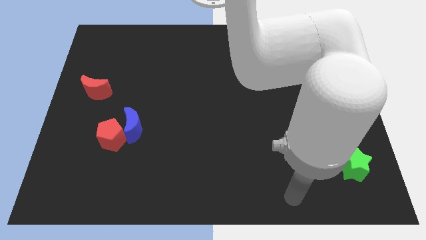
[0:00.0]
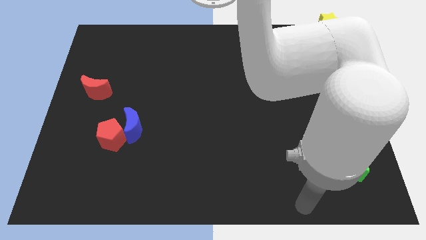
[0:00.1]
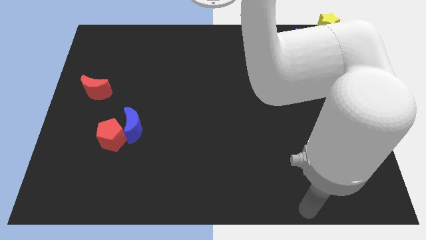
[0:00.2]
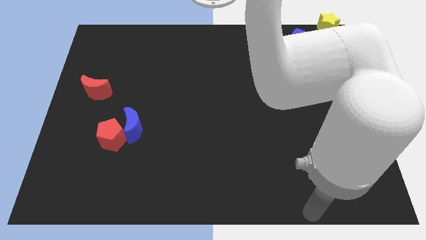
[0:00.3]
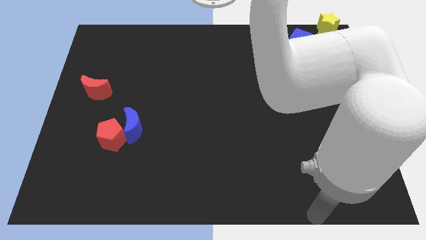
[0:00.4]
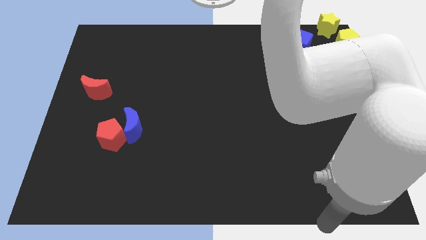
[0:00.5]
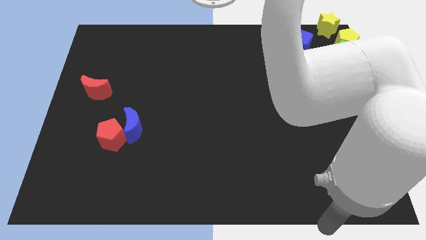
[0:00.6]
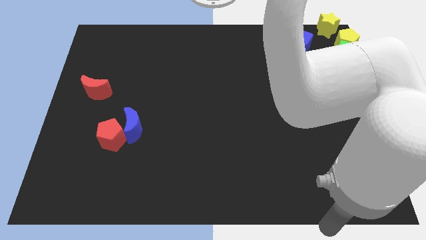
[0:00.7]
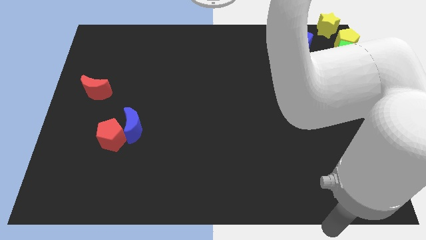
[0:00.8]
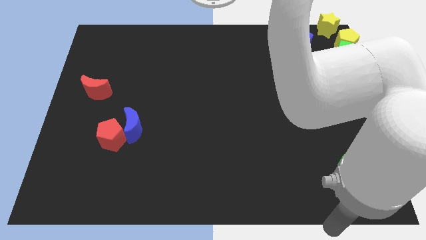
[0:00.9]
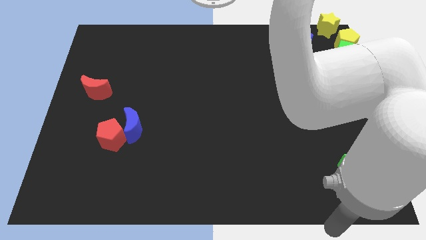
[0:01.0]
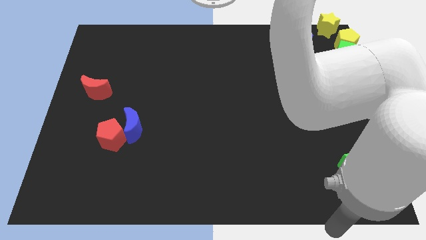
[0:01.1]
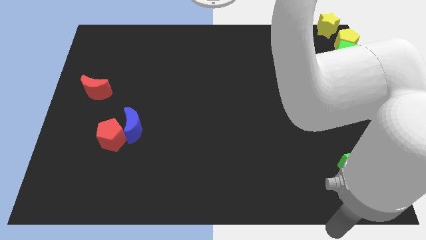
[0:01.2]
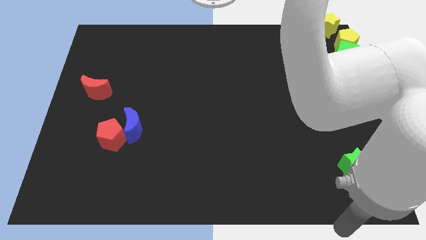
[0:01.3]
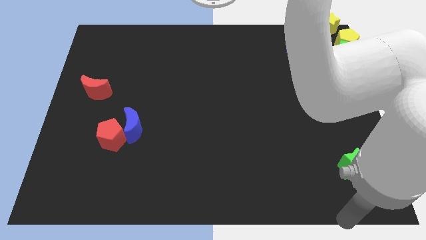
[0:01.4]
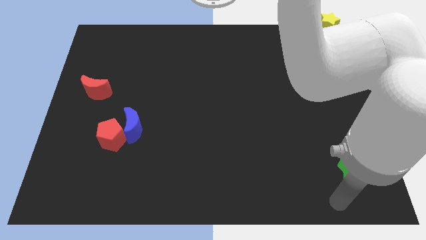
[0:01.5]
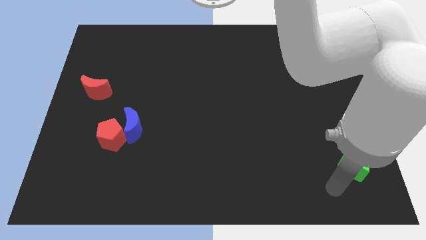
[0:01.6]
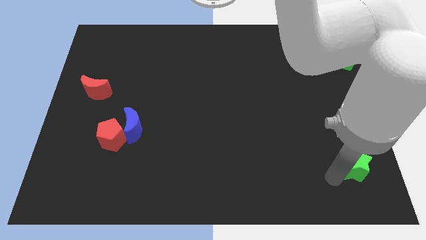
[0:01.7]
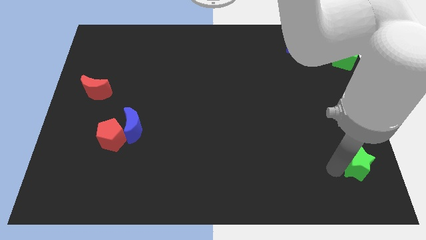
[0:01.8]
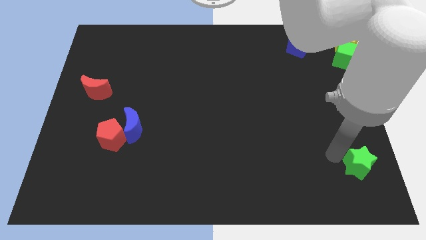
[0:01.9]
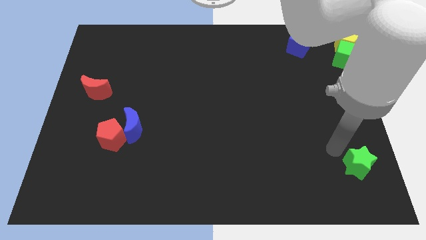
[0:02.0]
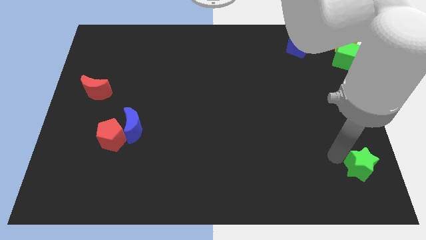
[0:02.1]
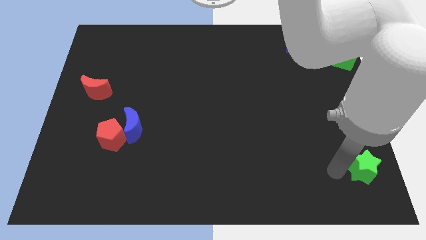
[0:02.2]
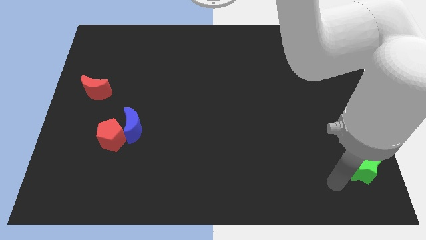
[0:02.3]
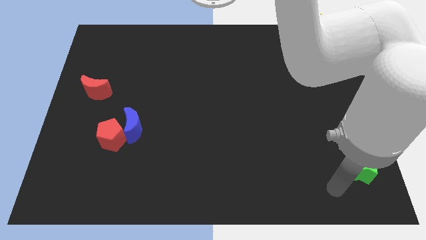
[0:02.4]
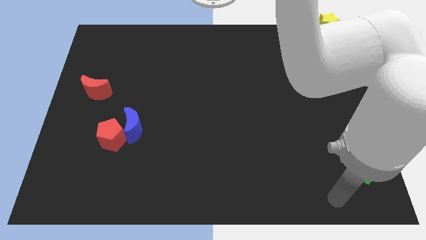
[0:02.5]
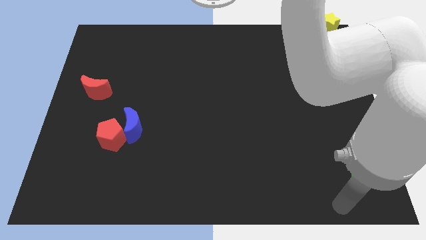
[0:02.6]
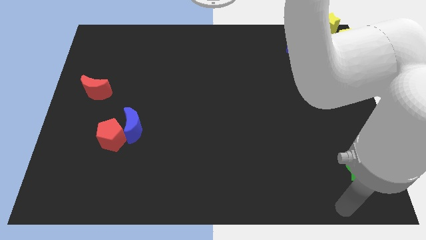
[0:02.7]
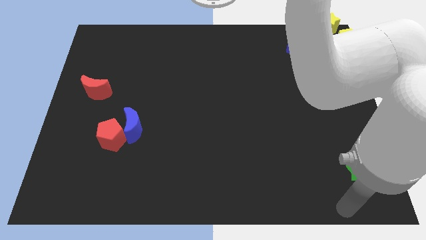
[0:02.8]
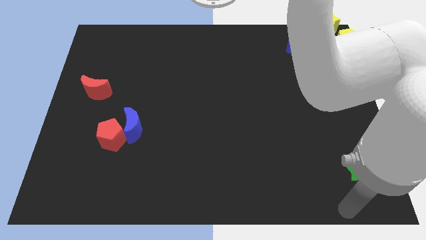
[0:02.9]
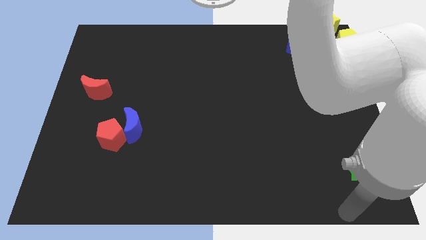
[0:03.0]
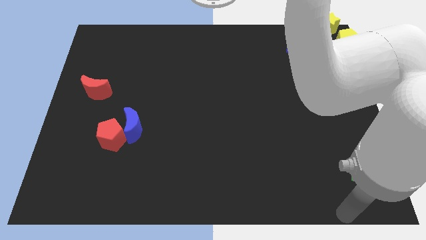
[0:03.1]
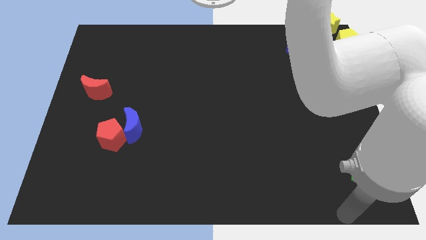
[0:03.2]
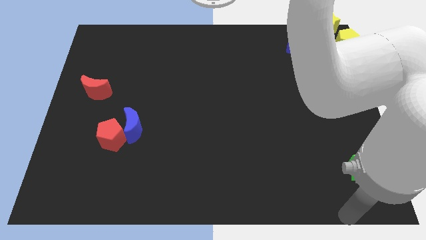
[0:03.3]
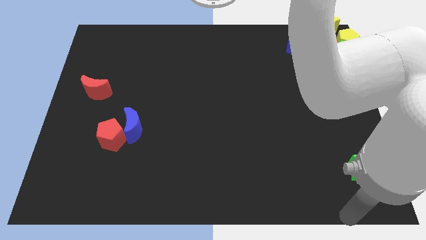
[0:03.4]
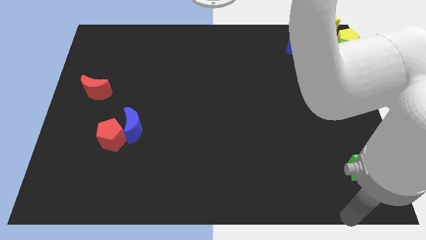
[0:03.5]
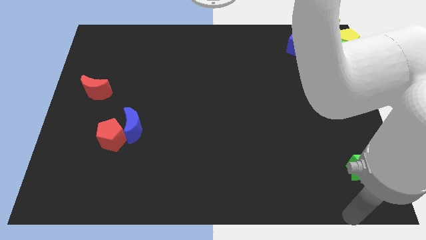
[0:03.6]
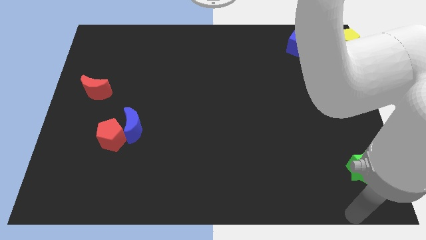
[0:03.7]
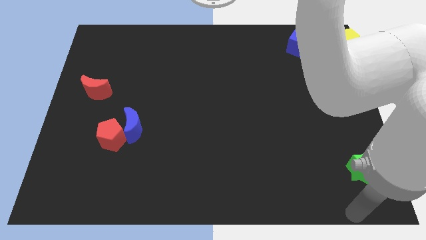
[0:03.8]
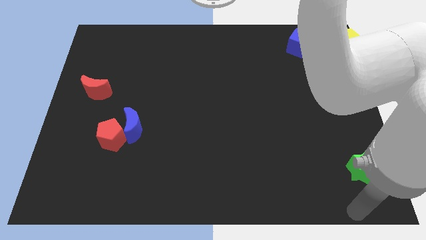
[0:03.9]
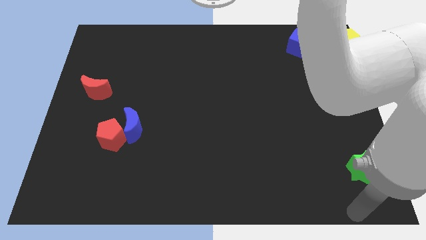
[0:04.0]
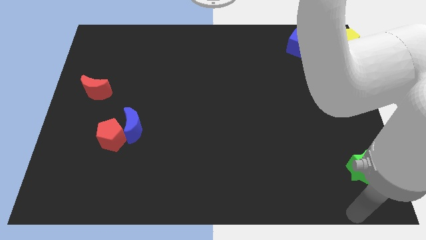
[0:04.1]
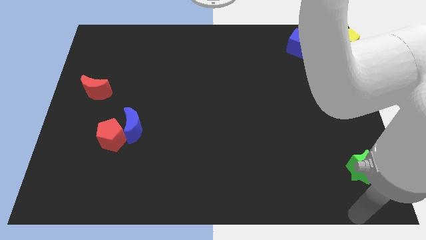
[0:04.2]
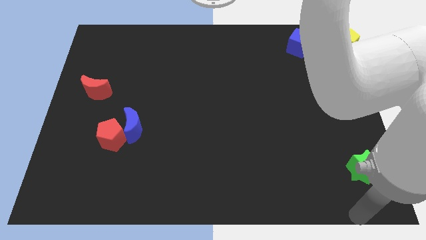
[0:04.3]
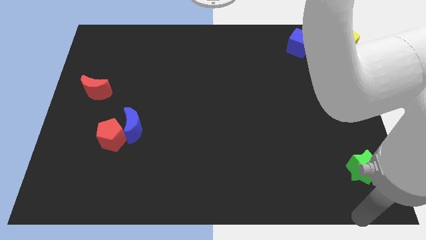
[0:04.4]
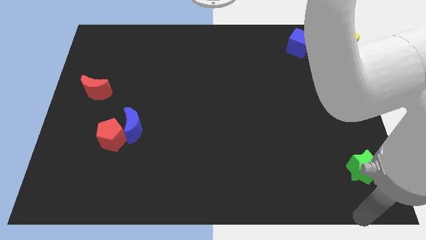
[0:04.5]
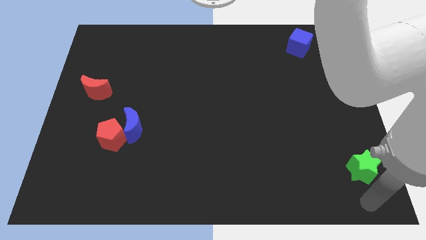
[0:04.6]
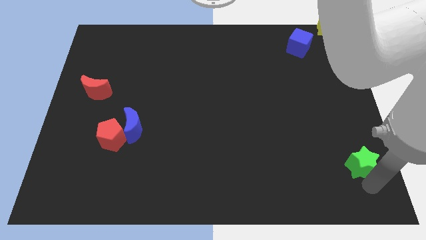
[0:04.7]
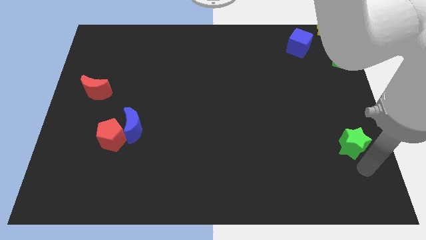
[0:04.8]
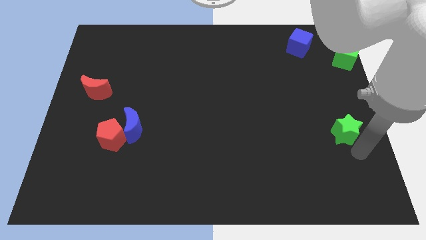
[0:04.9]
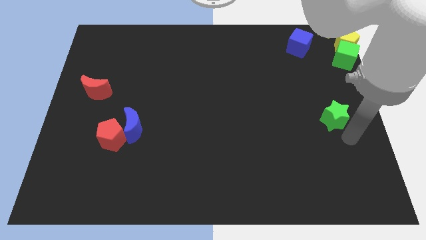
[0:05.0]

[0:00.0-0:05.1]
push the green star to the top

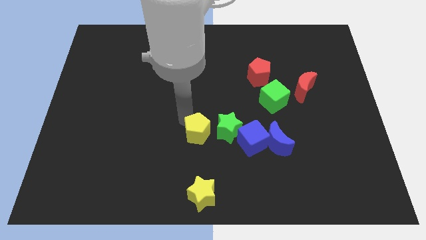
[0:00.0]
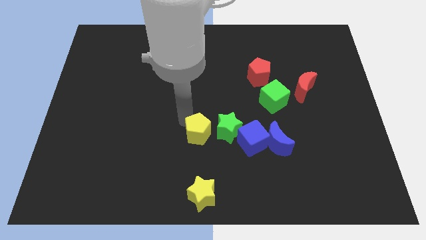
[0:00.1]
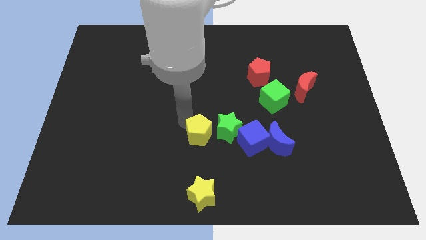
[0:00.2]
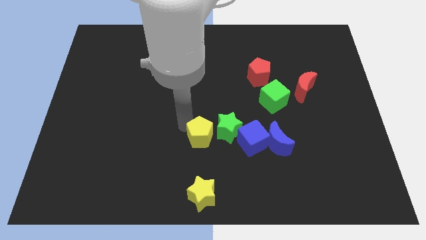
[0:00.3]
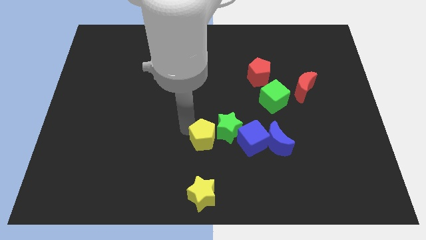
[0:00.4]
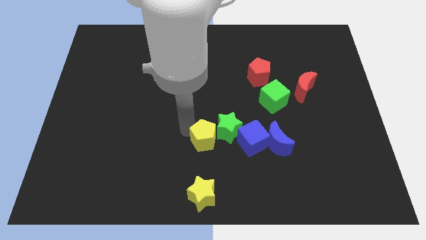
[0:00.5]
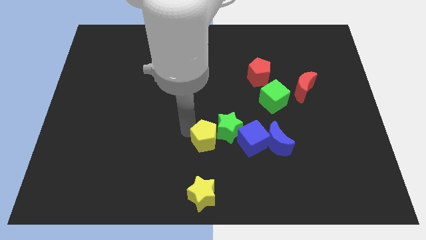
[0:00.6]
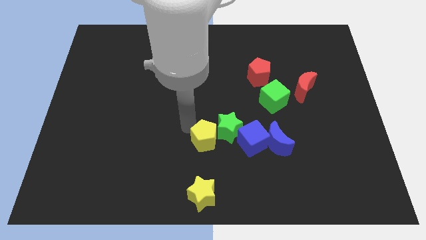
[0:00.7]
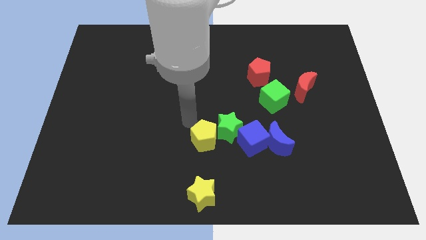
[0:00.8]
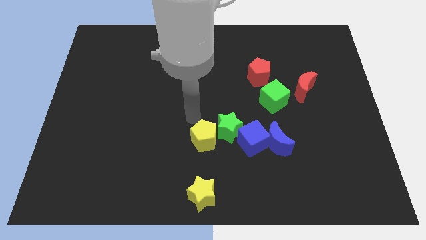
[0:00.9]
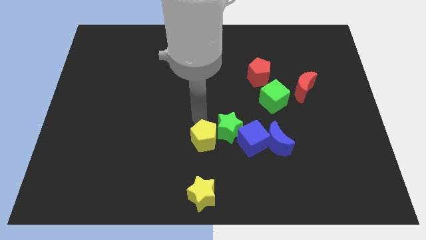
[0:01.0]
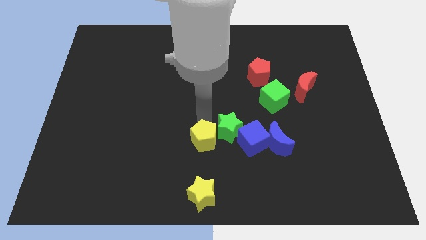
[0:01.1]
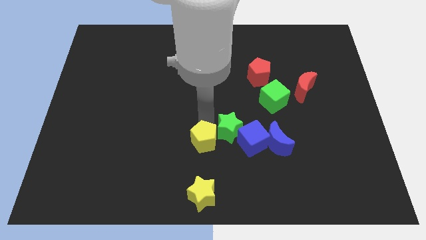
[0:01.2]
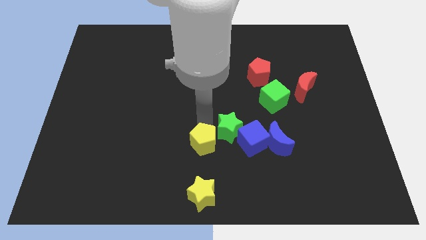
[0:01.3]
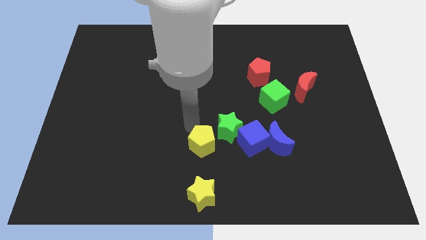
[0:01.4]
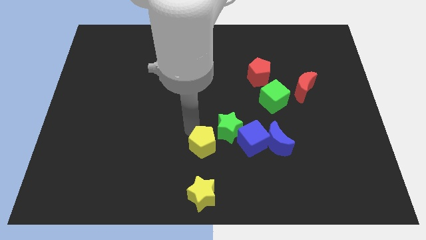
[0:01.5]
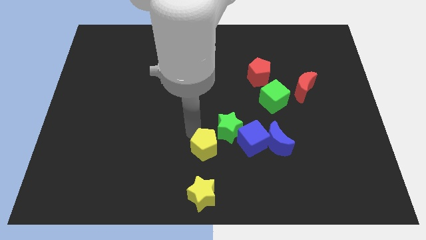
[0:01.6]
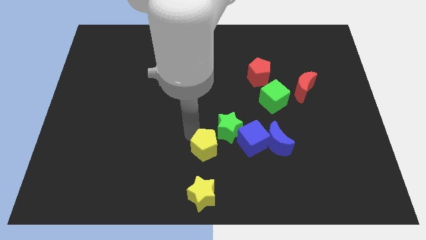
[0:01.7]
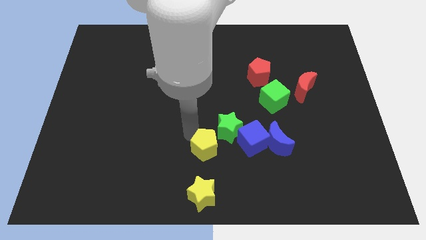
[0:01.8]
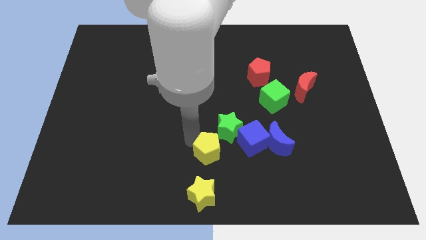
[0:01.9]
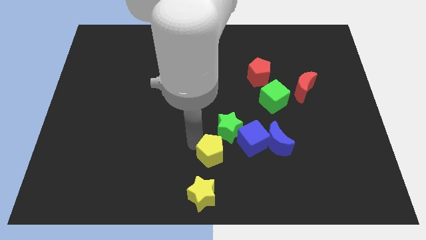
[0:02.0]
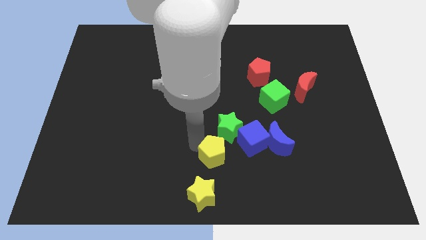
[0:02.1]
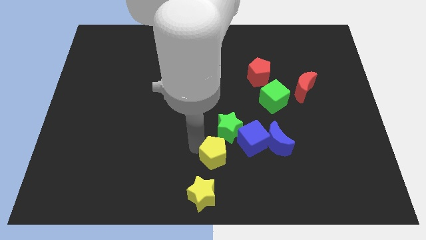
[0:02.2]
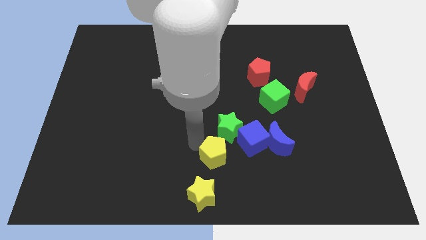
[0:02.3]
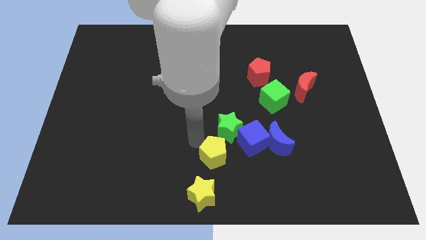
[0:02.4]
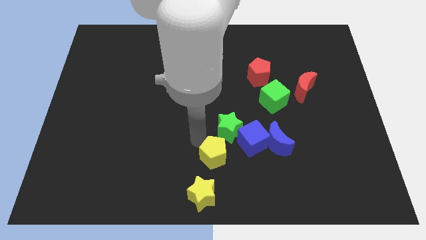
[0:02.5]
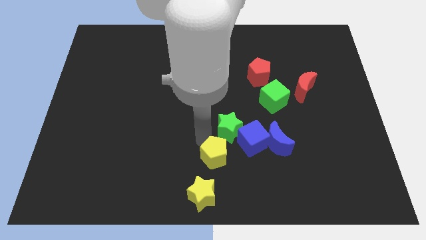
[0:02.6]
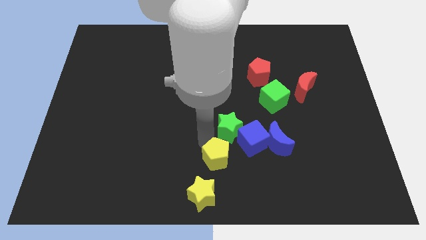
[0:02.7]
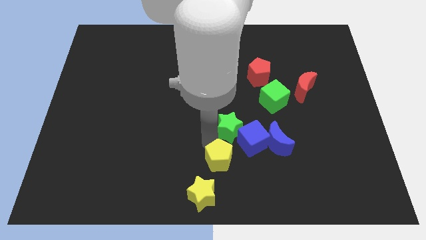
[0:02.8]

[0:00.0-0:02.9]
place the yellow pentagon below the green star

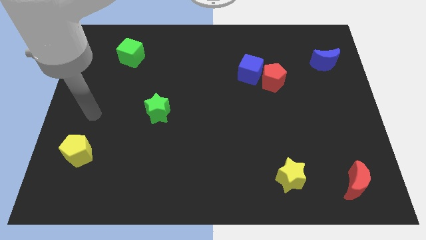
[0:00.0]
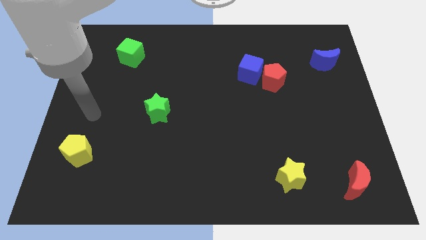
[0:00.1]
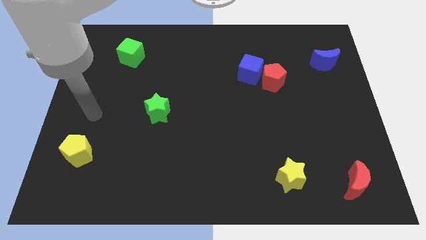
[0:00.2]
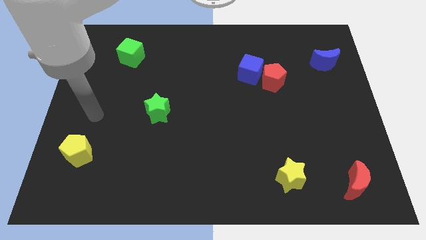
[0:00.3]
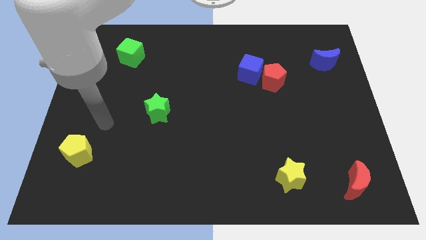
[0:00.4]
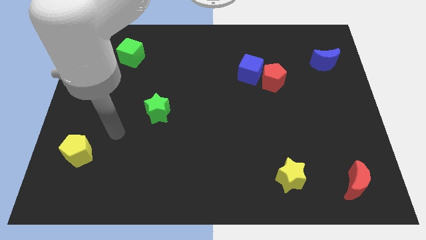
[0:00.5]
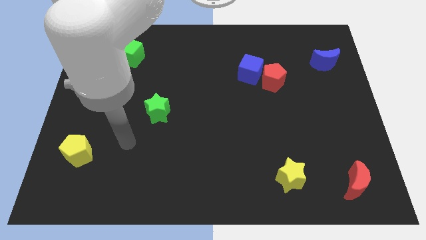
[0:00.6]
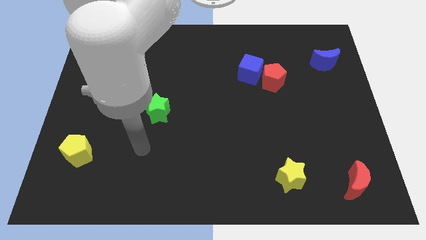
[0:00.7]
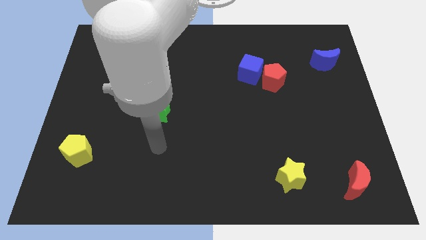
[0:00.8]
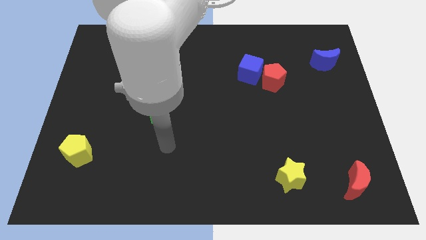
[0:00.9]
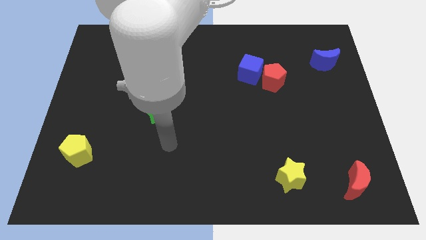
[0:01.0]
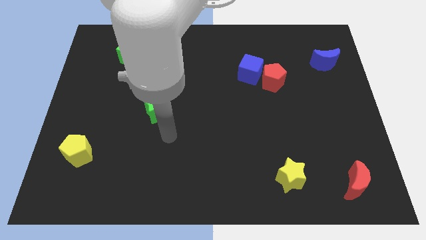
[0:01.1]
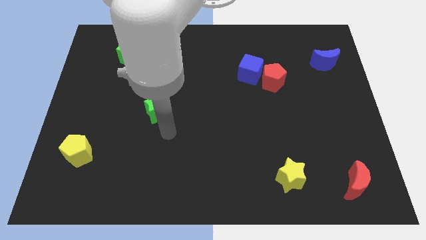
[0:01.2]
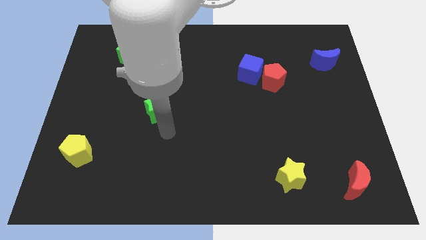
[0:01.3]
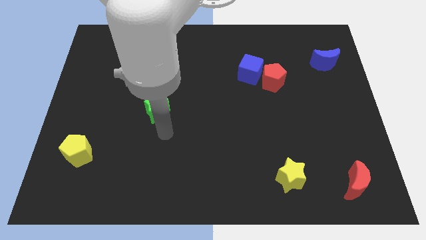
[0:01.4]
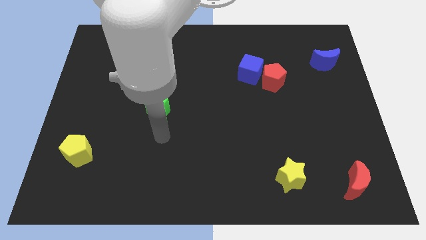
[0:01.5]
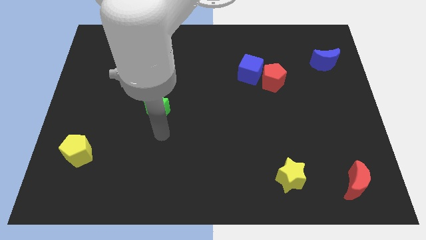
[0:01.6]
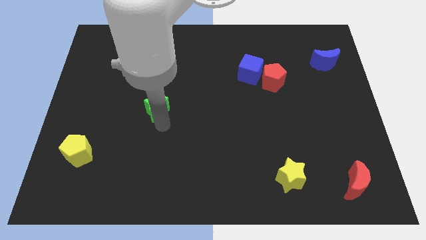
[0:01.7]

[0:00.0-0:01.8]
move your arm to the bottom side of the green star
